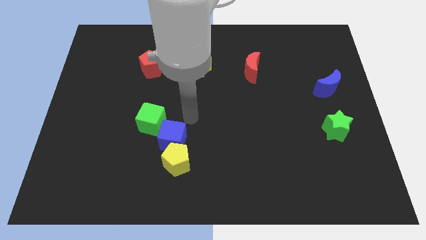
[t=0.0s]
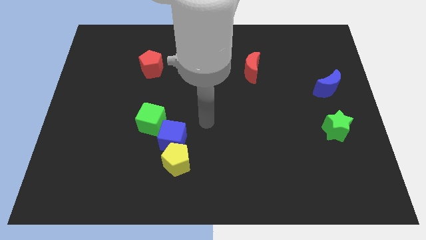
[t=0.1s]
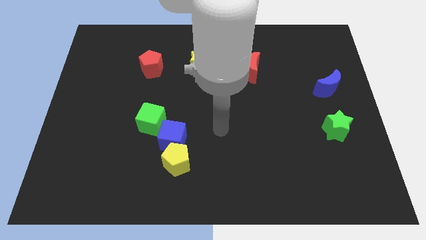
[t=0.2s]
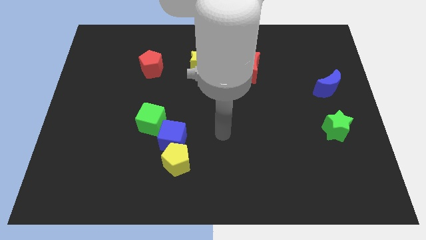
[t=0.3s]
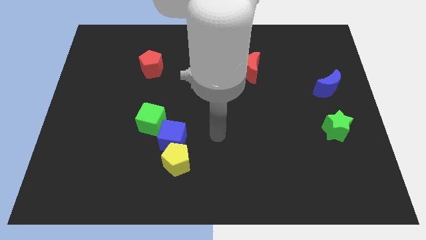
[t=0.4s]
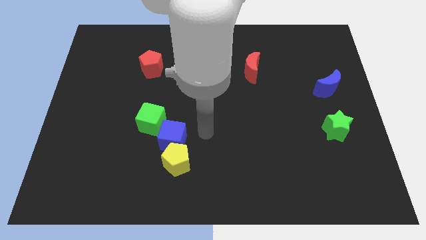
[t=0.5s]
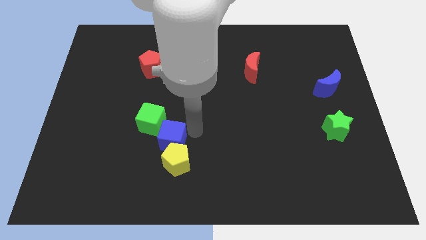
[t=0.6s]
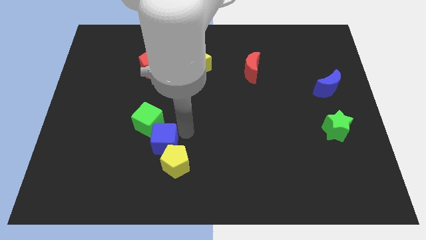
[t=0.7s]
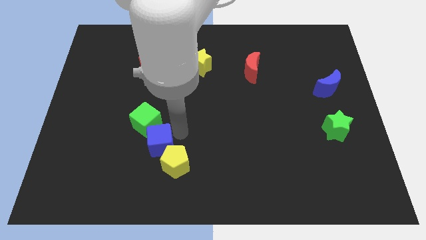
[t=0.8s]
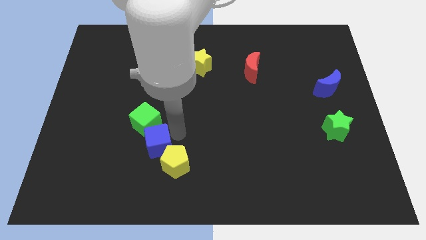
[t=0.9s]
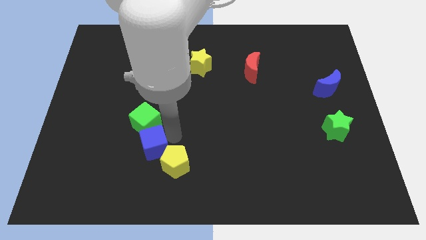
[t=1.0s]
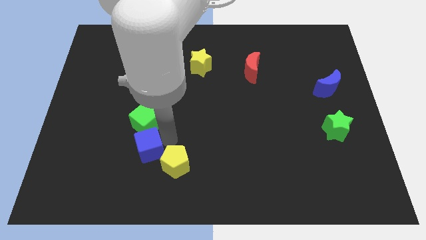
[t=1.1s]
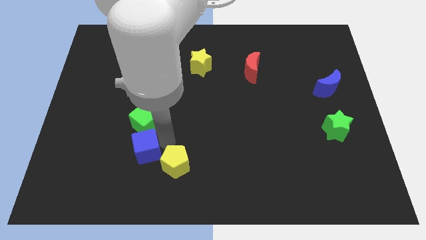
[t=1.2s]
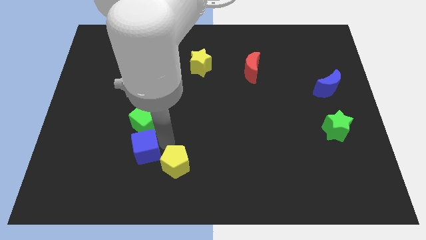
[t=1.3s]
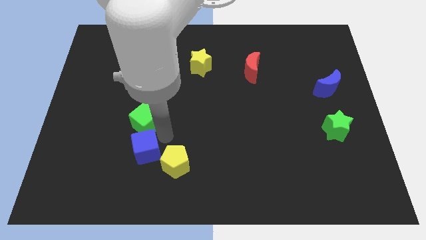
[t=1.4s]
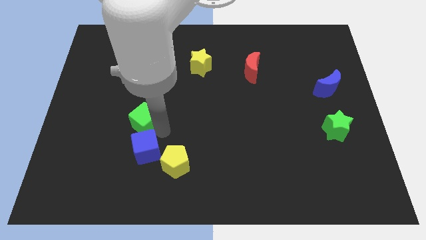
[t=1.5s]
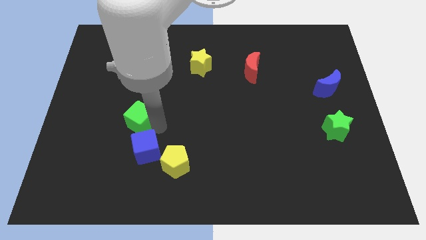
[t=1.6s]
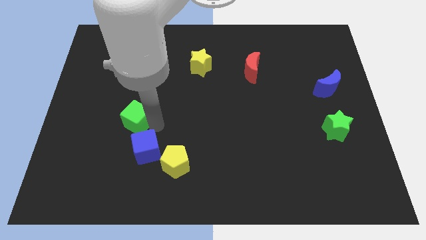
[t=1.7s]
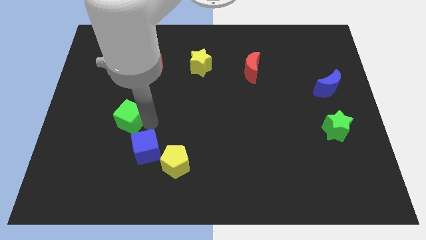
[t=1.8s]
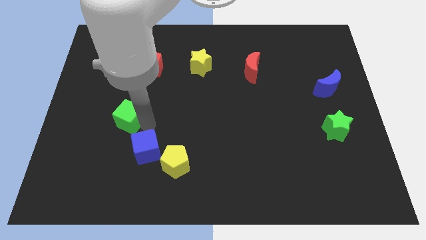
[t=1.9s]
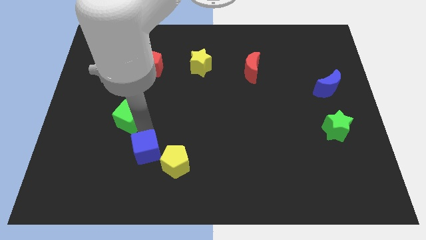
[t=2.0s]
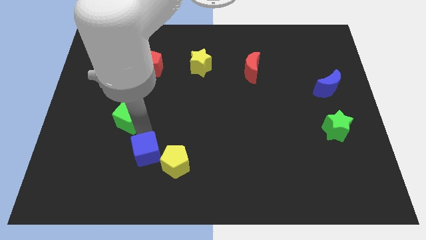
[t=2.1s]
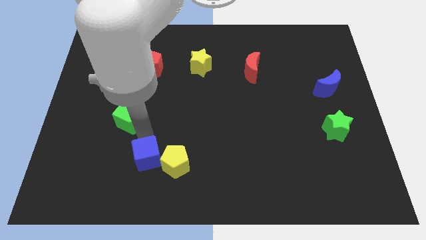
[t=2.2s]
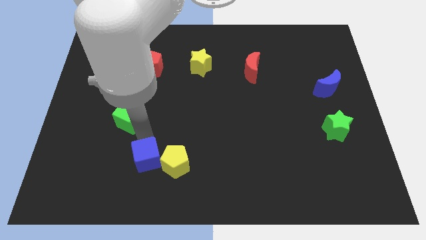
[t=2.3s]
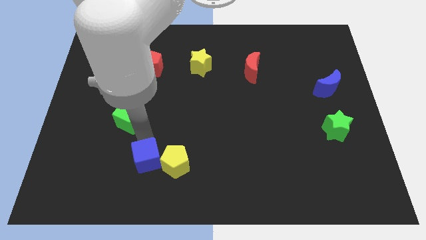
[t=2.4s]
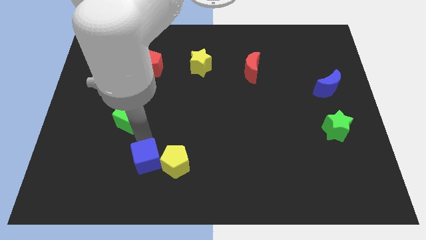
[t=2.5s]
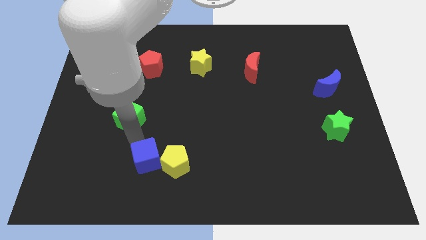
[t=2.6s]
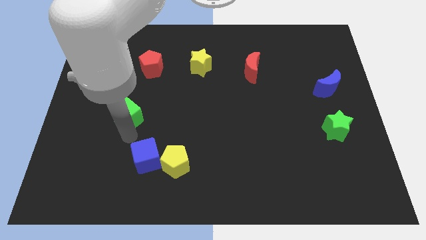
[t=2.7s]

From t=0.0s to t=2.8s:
place the blue cube to the left of the yellow pentagon

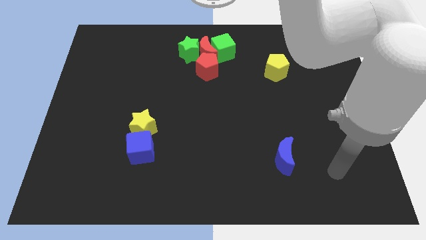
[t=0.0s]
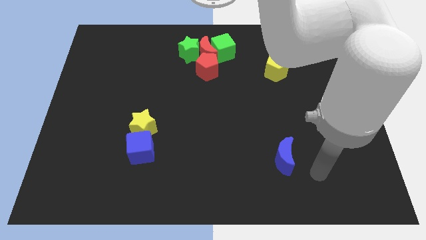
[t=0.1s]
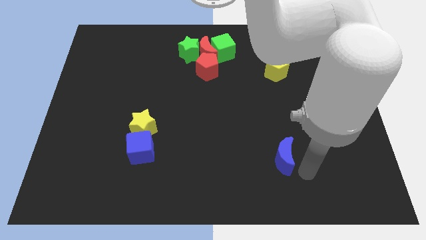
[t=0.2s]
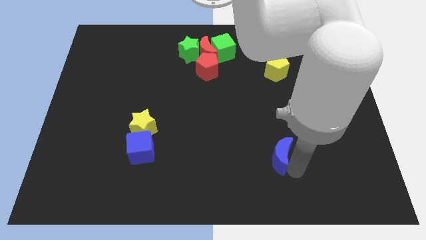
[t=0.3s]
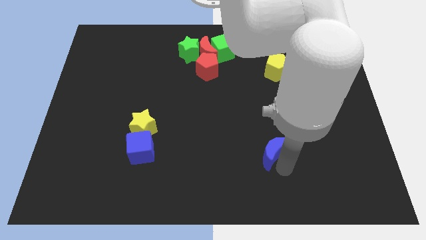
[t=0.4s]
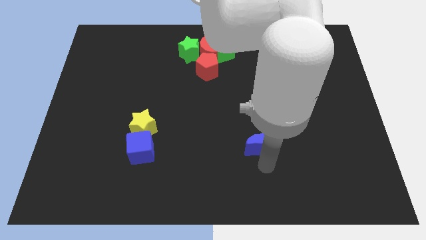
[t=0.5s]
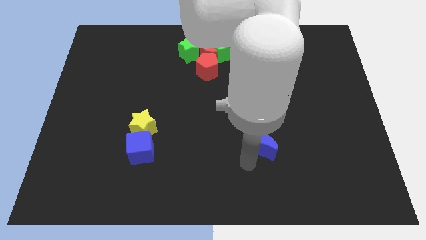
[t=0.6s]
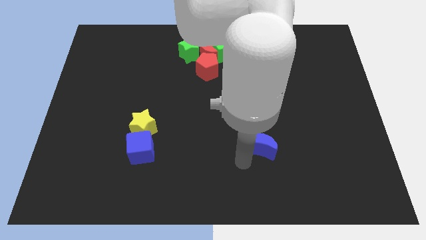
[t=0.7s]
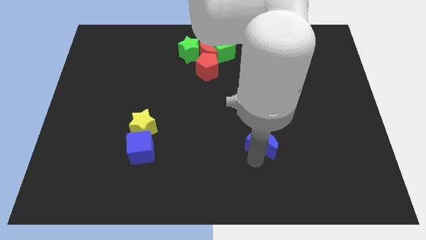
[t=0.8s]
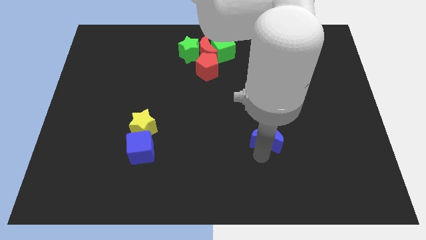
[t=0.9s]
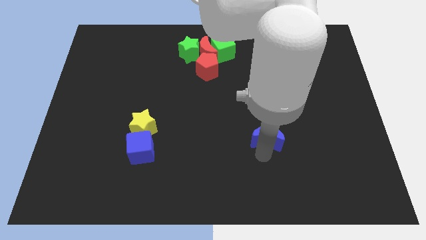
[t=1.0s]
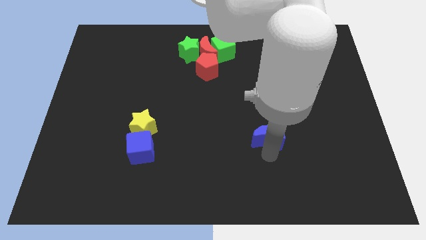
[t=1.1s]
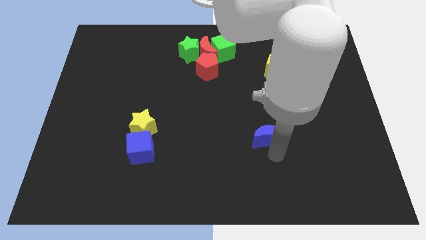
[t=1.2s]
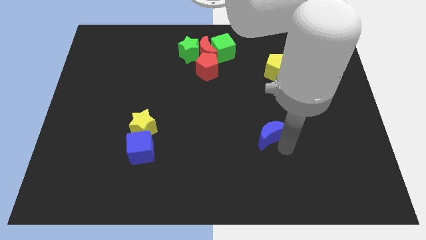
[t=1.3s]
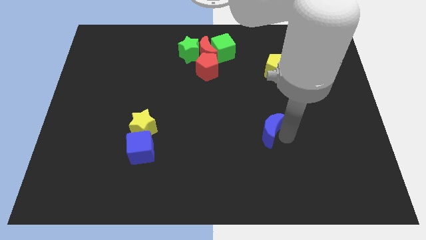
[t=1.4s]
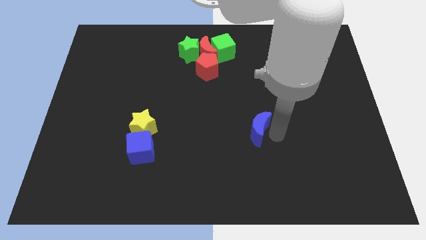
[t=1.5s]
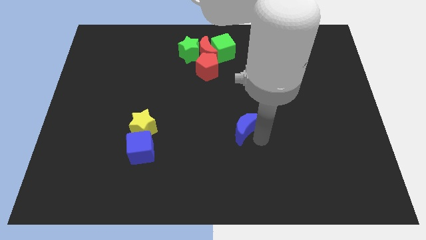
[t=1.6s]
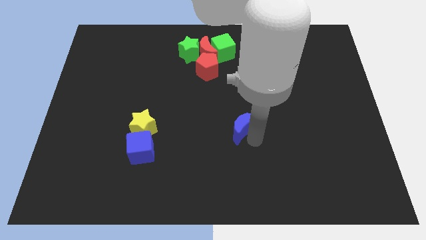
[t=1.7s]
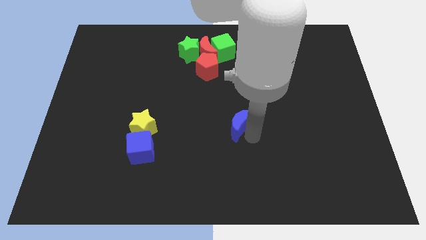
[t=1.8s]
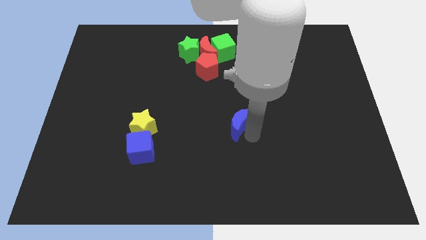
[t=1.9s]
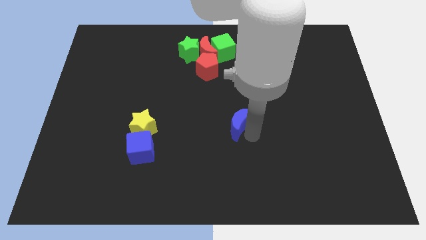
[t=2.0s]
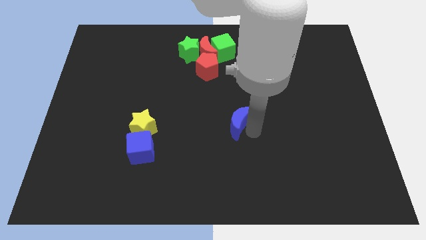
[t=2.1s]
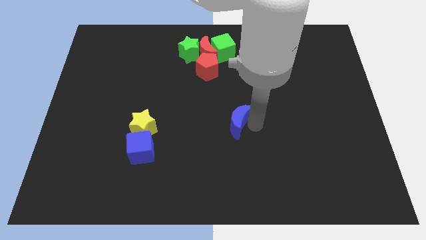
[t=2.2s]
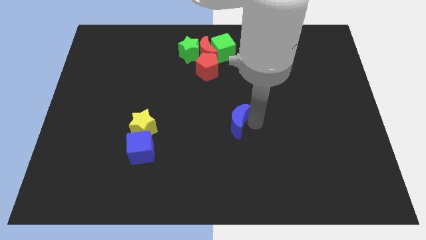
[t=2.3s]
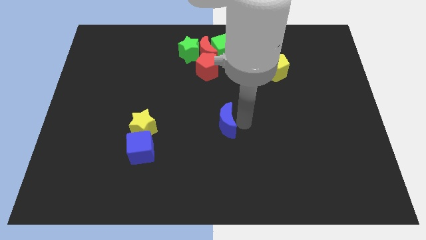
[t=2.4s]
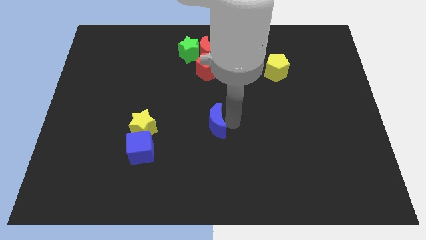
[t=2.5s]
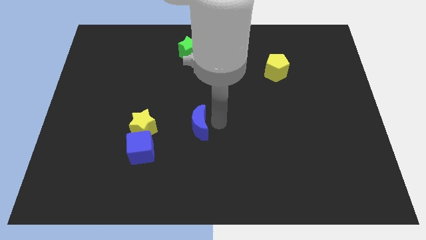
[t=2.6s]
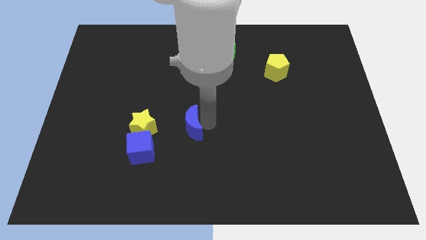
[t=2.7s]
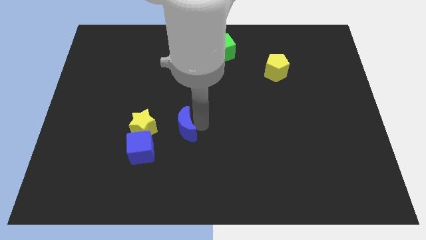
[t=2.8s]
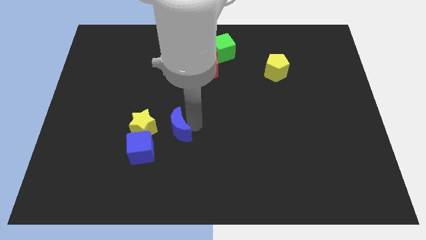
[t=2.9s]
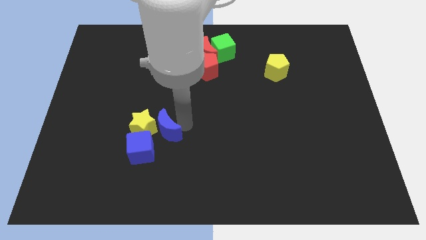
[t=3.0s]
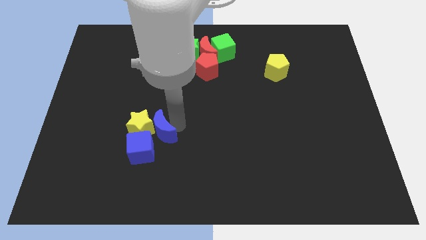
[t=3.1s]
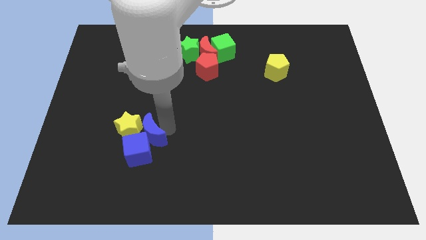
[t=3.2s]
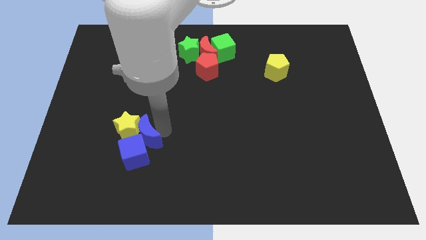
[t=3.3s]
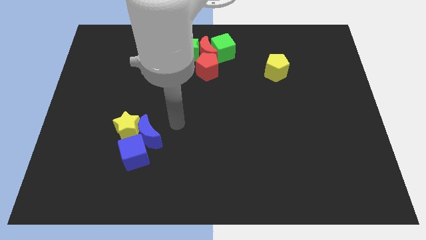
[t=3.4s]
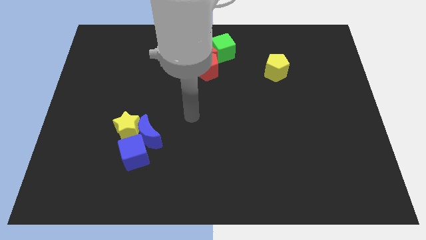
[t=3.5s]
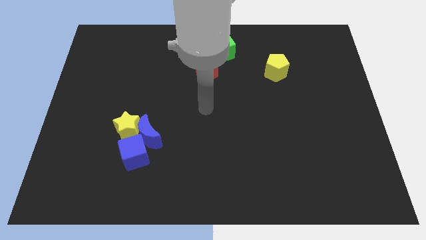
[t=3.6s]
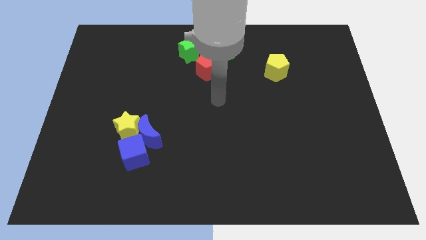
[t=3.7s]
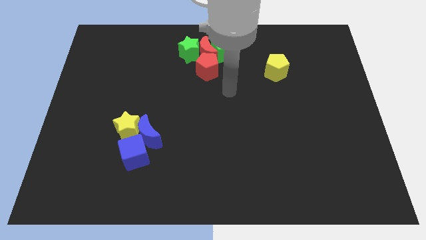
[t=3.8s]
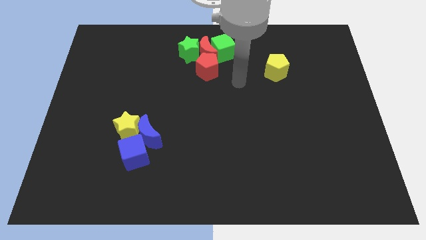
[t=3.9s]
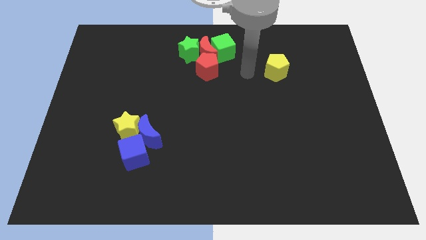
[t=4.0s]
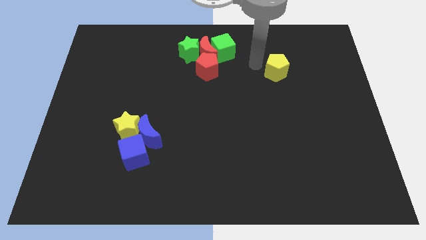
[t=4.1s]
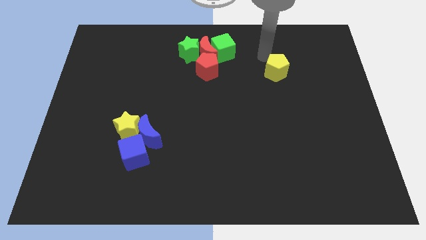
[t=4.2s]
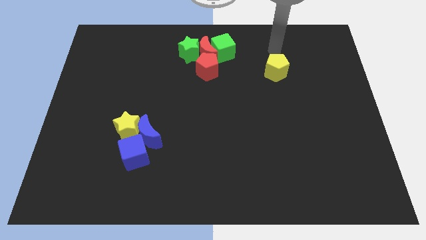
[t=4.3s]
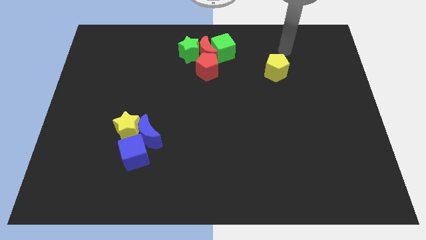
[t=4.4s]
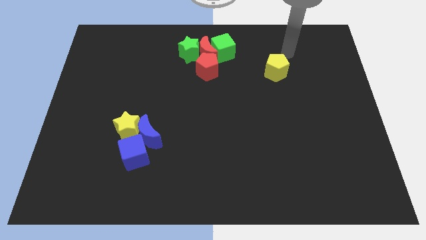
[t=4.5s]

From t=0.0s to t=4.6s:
place the blue moon to the right of blue cube and yellow star

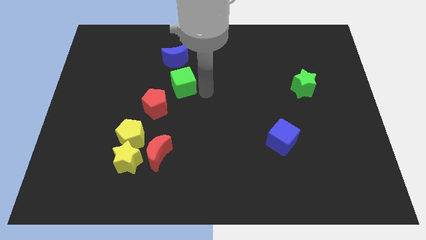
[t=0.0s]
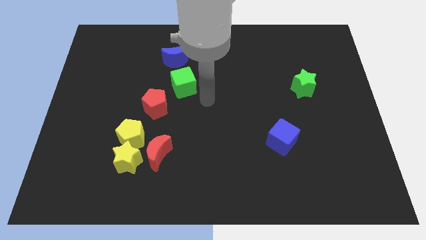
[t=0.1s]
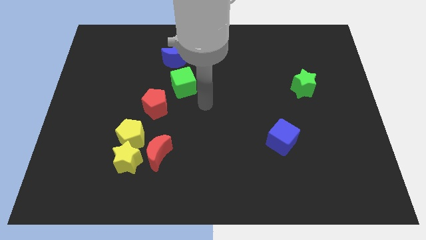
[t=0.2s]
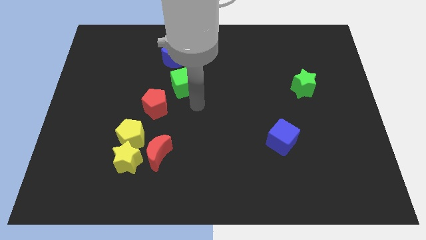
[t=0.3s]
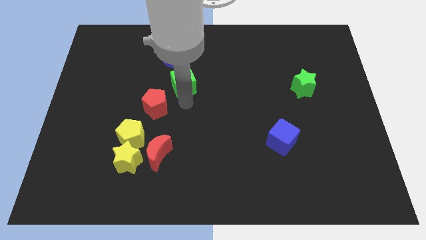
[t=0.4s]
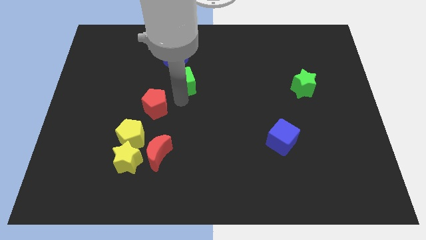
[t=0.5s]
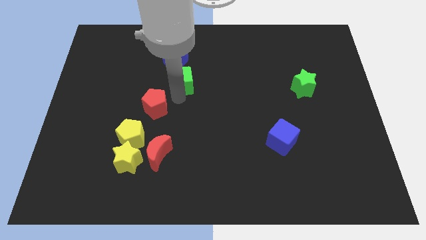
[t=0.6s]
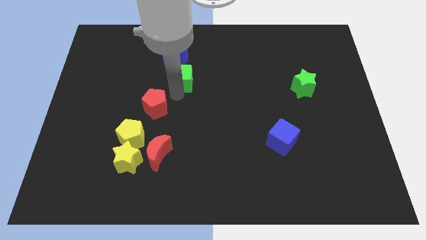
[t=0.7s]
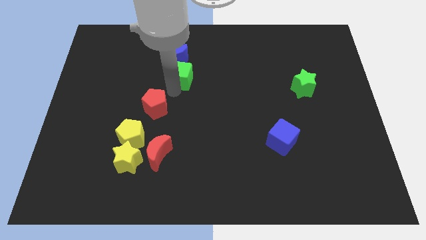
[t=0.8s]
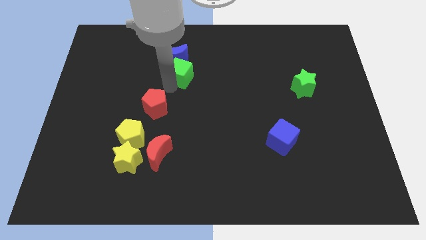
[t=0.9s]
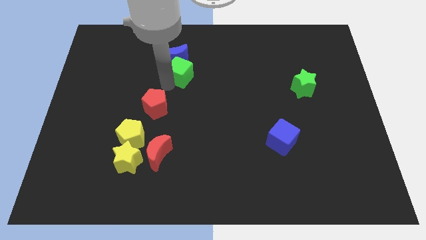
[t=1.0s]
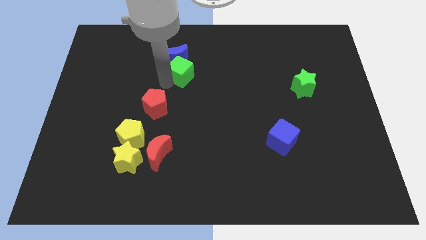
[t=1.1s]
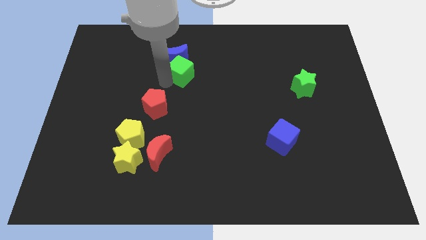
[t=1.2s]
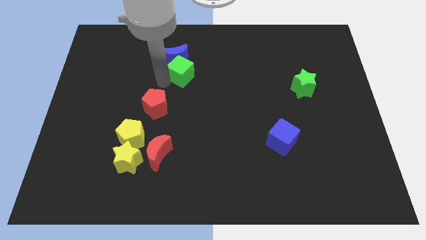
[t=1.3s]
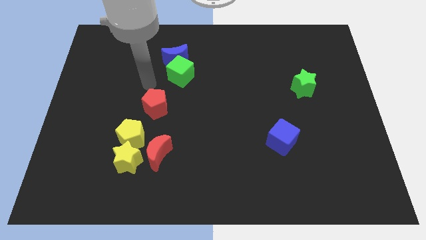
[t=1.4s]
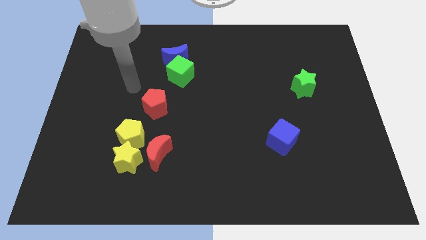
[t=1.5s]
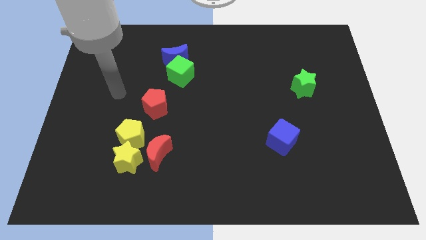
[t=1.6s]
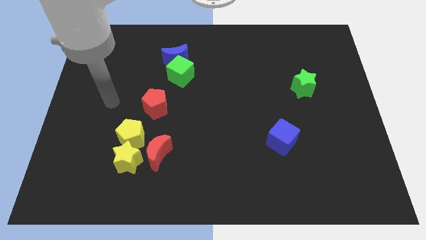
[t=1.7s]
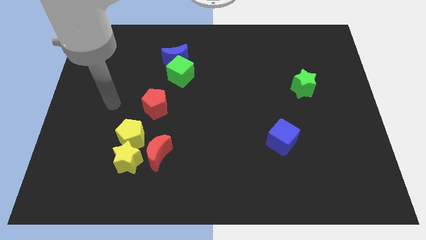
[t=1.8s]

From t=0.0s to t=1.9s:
put the green cube below the blue moon
